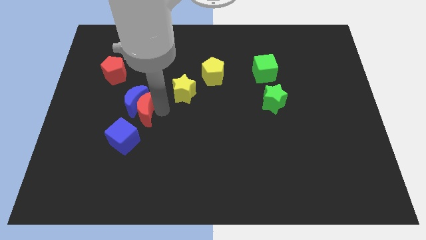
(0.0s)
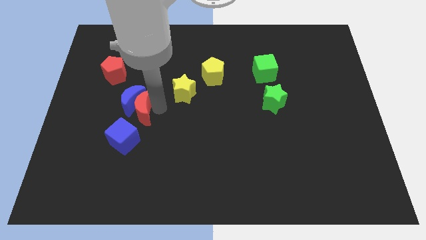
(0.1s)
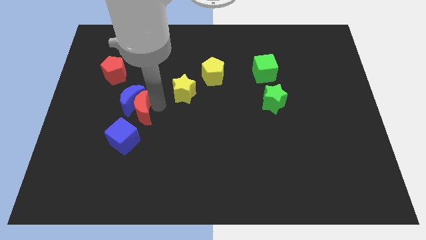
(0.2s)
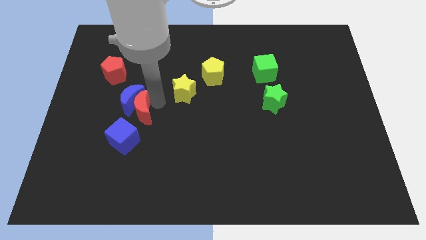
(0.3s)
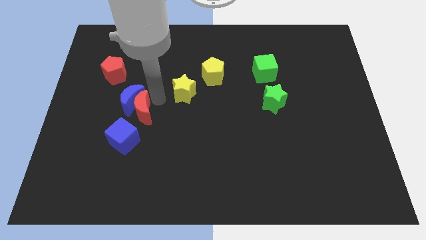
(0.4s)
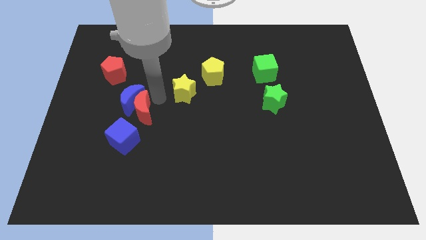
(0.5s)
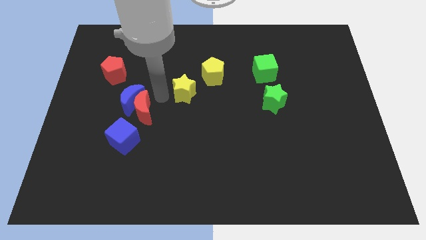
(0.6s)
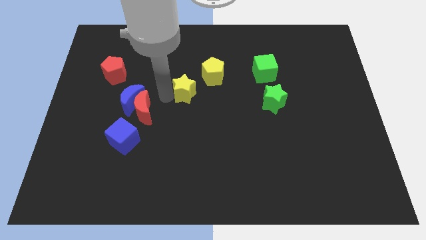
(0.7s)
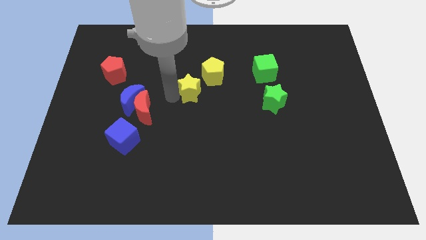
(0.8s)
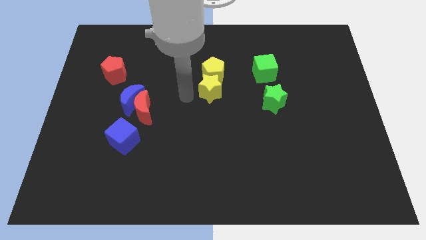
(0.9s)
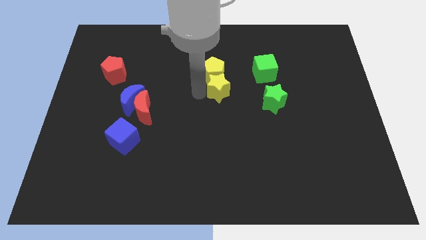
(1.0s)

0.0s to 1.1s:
move yellow star below yellow pentagon

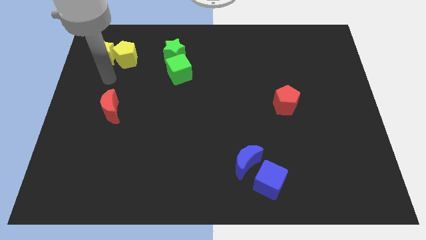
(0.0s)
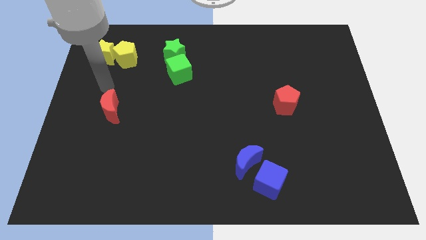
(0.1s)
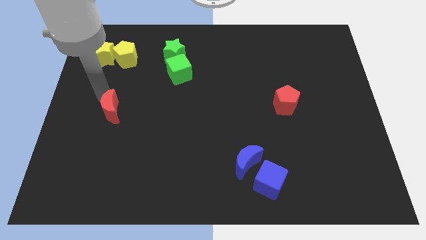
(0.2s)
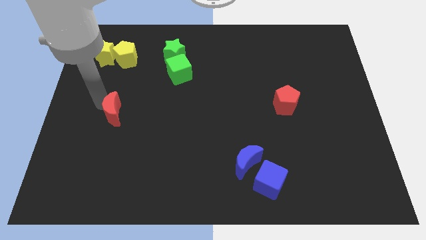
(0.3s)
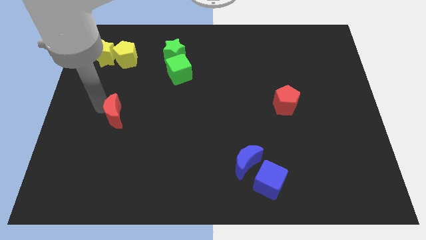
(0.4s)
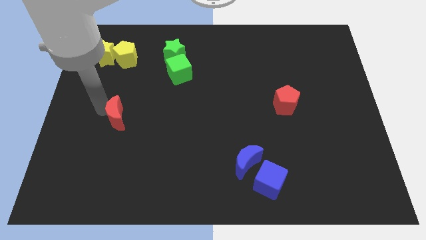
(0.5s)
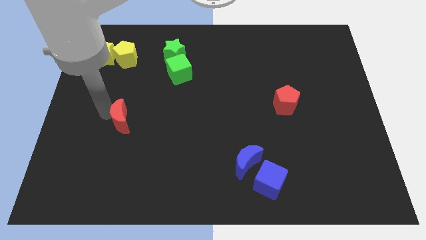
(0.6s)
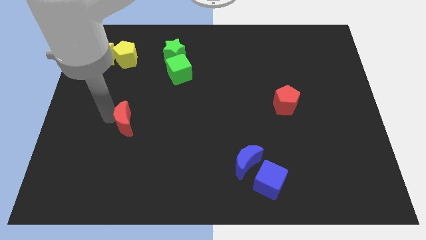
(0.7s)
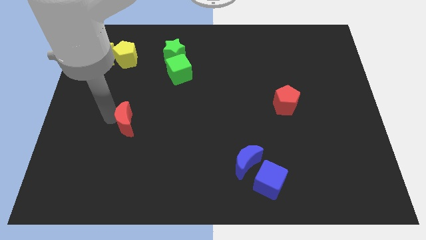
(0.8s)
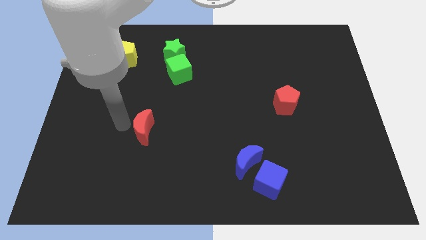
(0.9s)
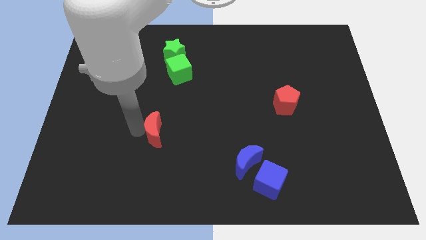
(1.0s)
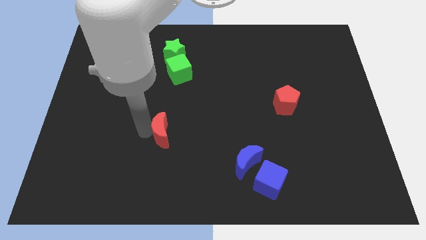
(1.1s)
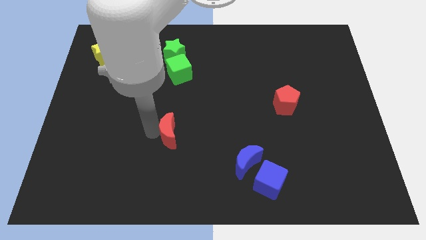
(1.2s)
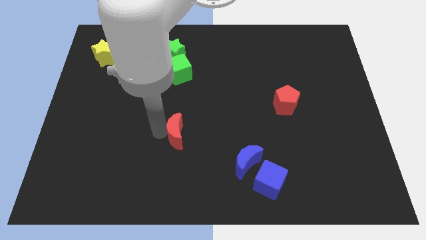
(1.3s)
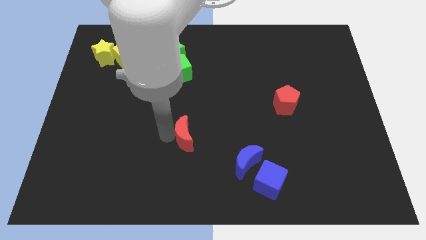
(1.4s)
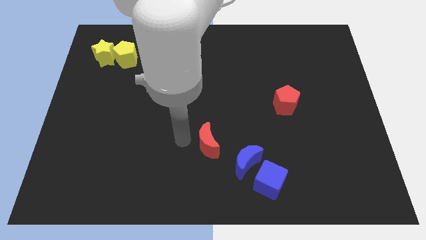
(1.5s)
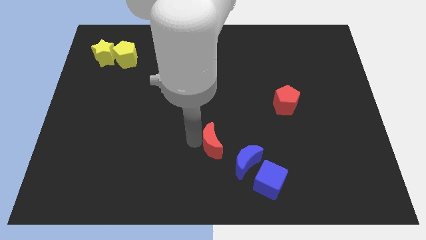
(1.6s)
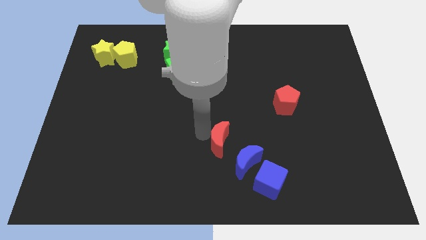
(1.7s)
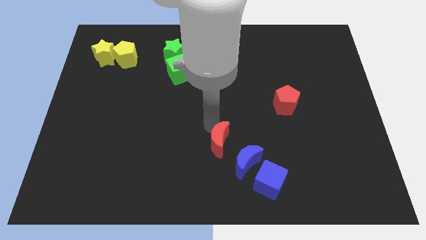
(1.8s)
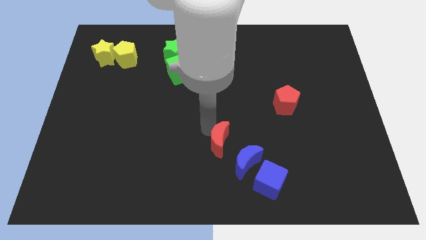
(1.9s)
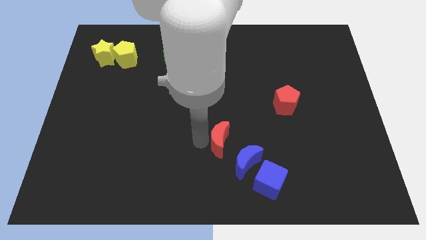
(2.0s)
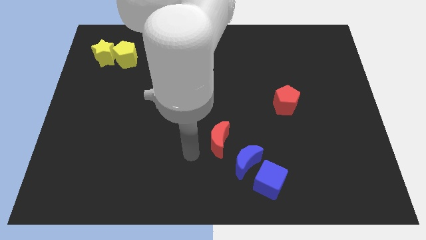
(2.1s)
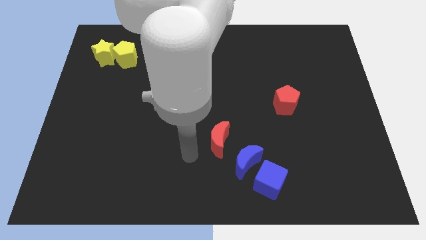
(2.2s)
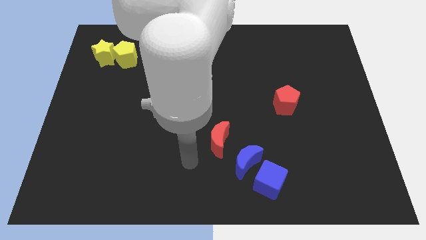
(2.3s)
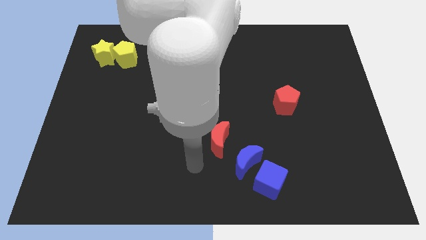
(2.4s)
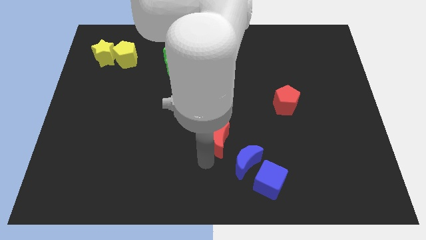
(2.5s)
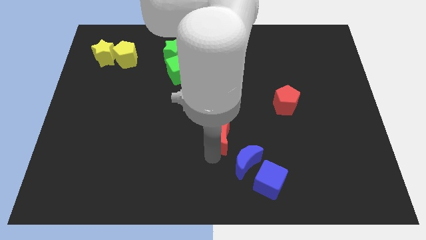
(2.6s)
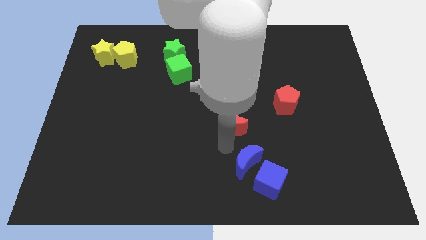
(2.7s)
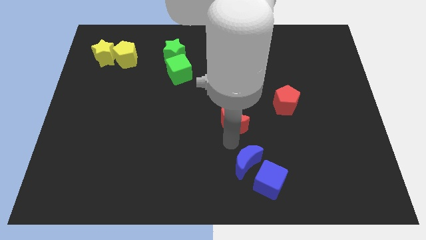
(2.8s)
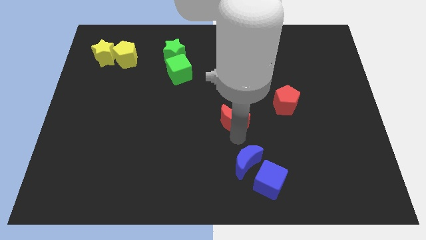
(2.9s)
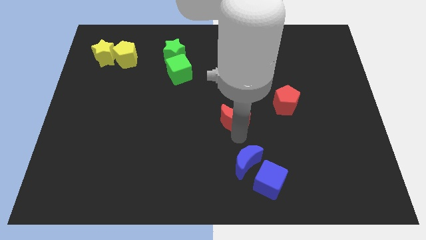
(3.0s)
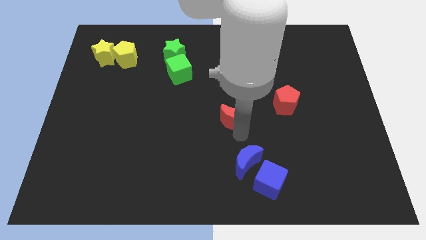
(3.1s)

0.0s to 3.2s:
move the red crescent towards the center of the board

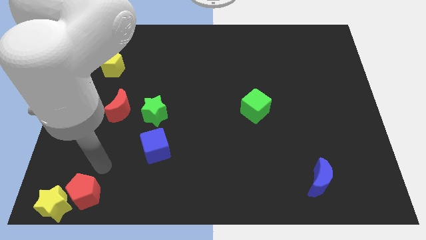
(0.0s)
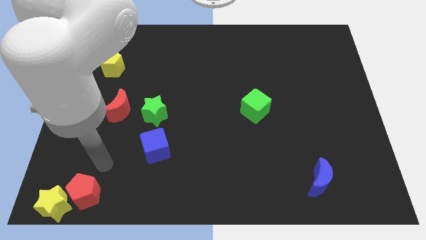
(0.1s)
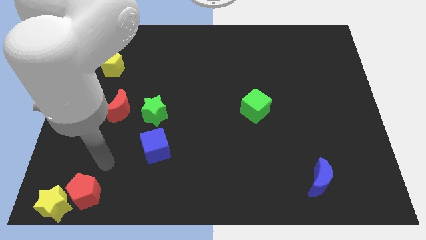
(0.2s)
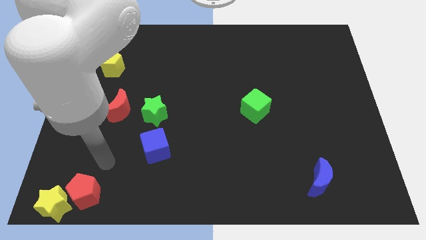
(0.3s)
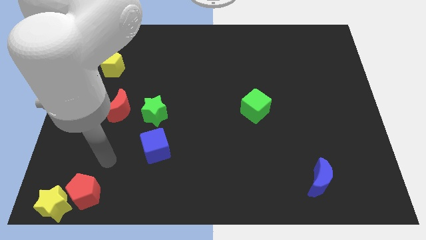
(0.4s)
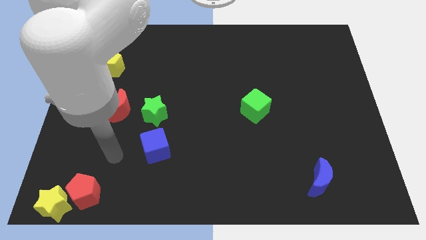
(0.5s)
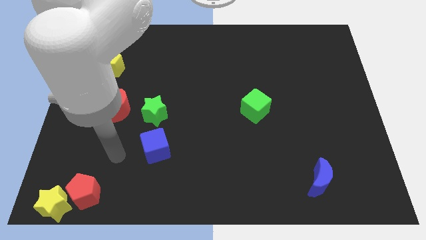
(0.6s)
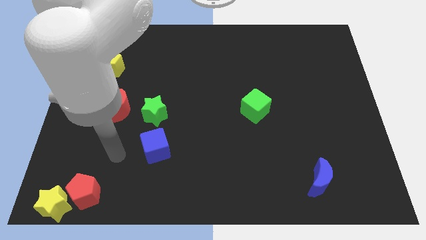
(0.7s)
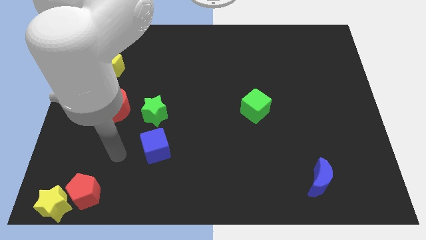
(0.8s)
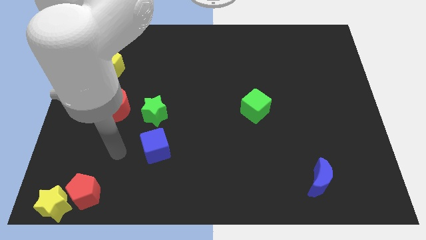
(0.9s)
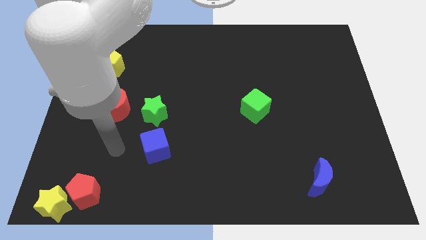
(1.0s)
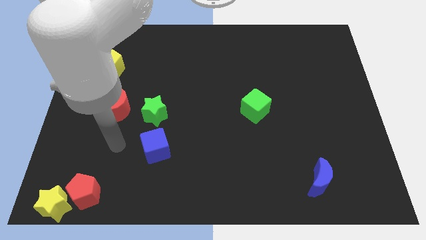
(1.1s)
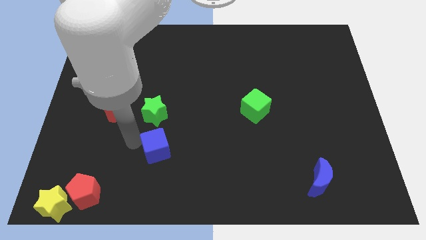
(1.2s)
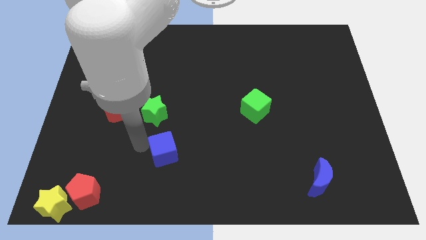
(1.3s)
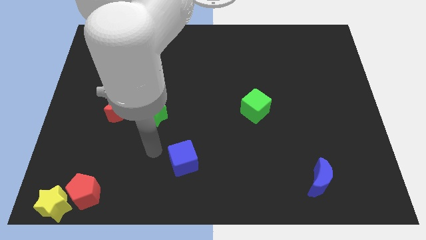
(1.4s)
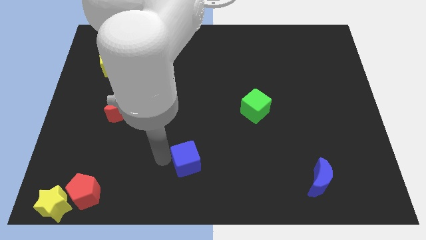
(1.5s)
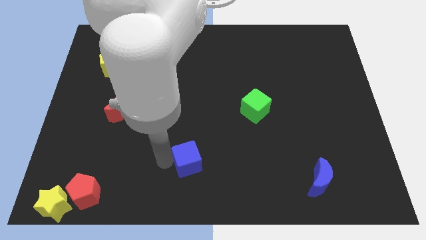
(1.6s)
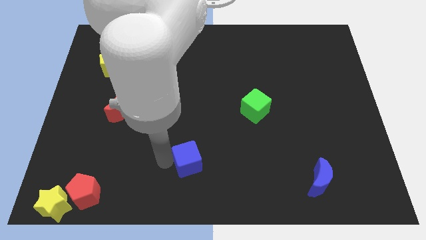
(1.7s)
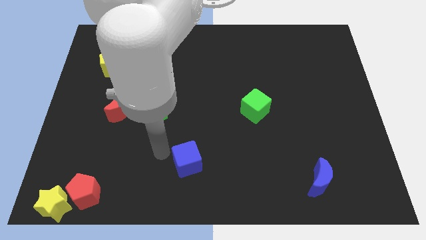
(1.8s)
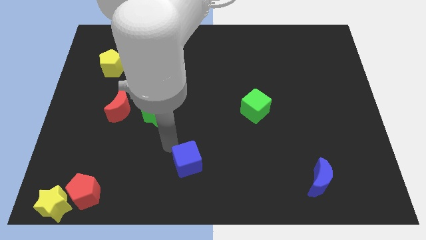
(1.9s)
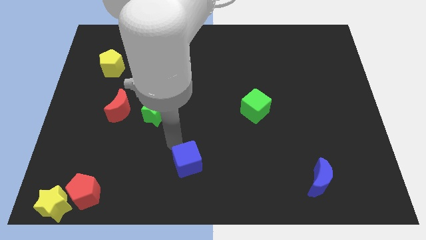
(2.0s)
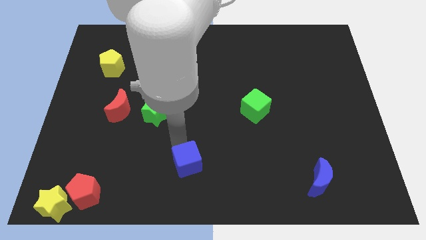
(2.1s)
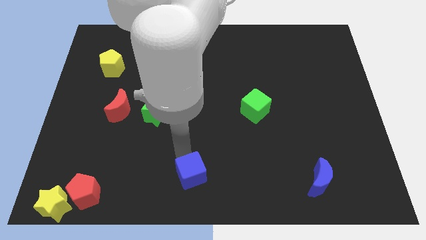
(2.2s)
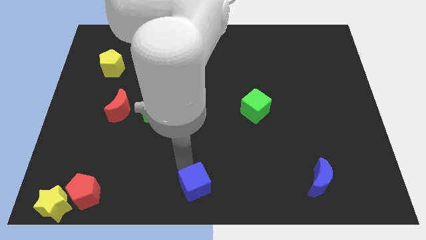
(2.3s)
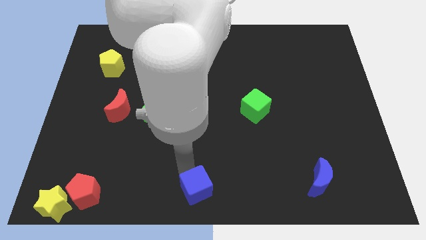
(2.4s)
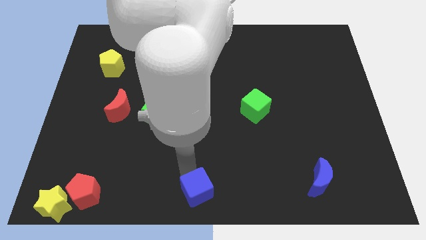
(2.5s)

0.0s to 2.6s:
move the blue cube to the right of the red pentagon

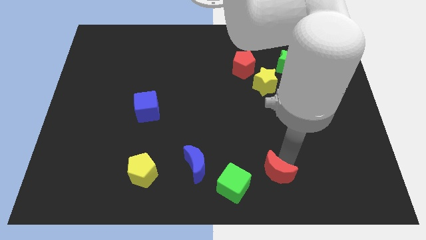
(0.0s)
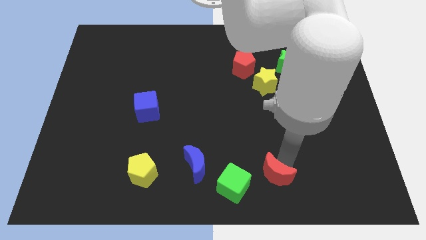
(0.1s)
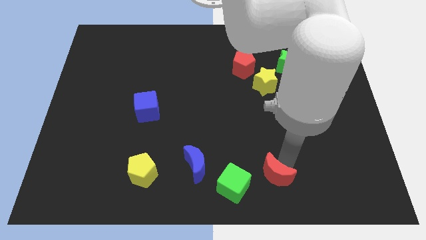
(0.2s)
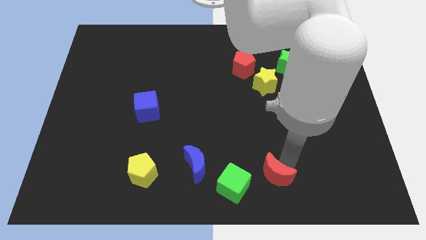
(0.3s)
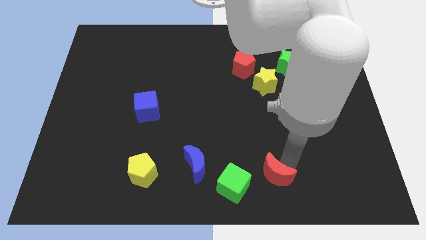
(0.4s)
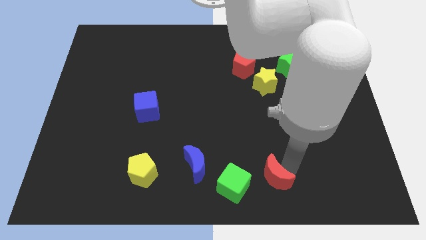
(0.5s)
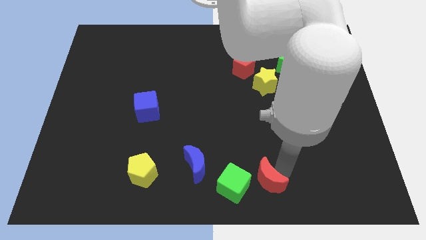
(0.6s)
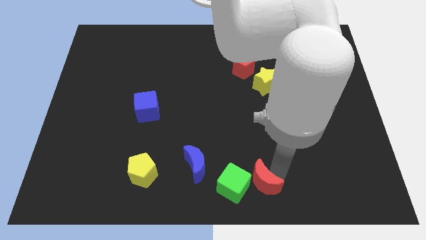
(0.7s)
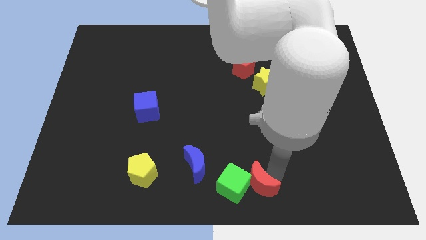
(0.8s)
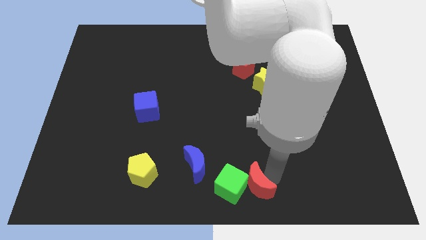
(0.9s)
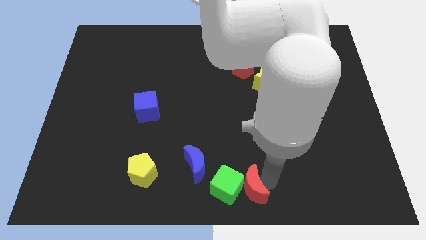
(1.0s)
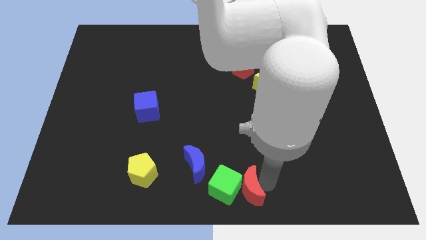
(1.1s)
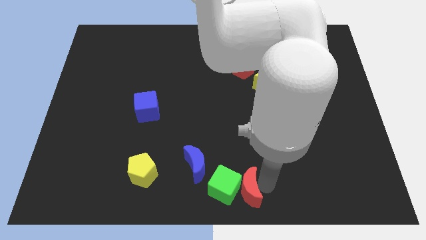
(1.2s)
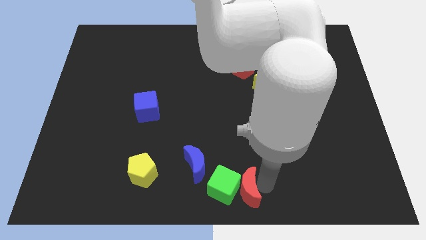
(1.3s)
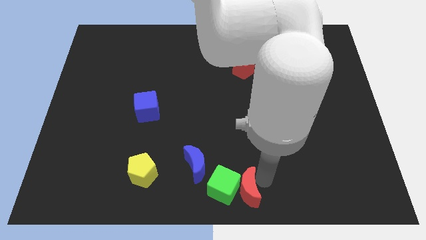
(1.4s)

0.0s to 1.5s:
move the red moon into the green cube

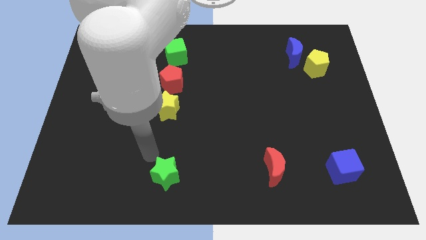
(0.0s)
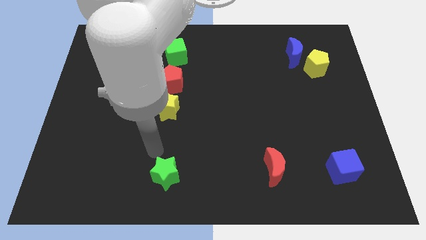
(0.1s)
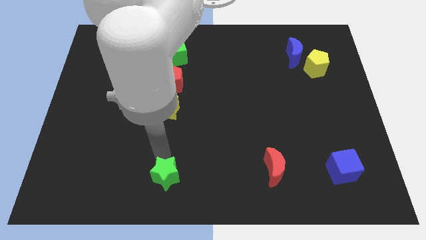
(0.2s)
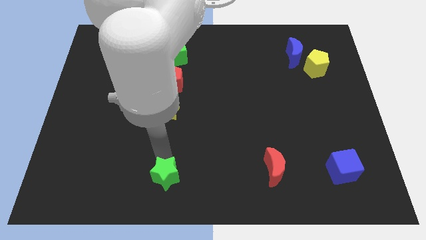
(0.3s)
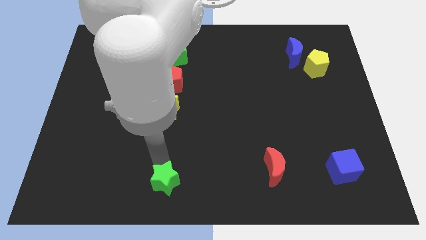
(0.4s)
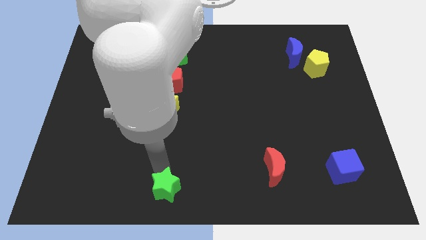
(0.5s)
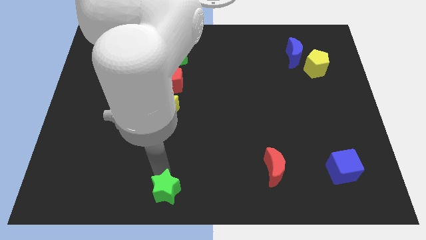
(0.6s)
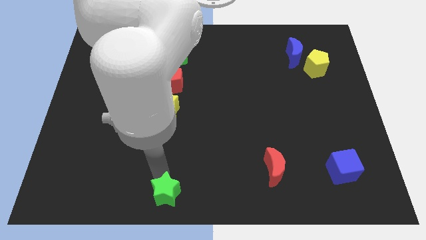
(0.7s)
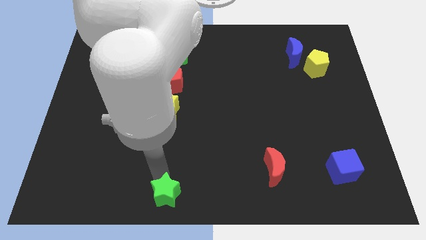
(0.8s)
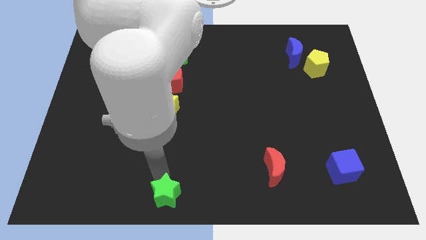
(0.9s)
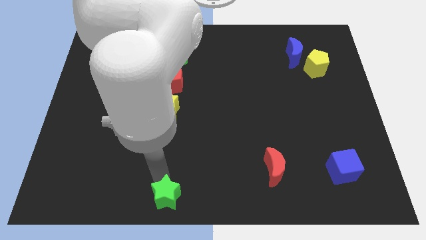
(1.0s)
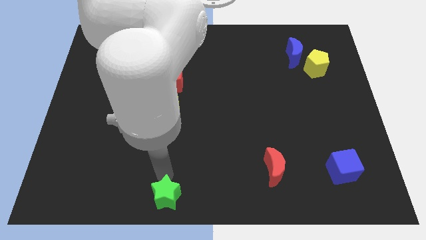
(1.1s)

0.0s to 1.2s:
push the green star to the bottom of the board
